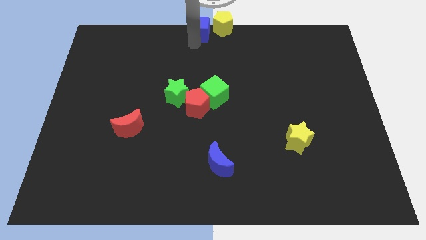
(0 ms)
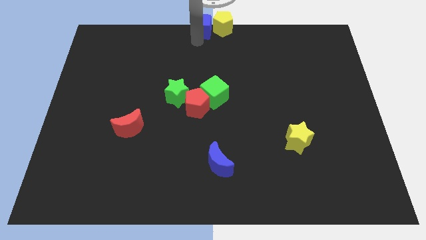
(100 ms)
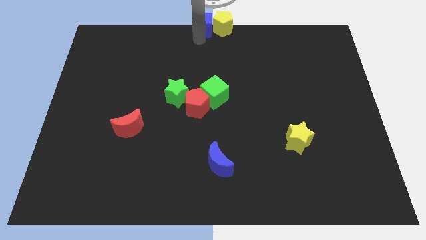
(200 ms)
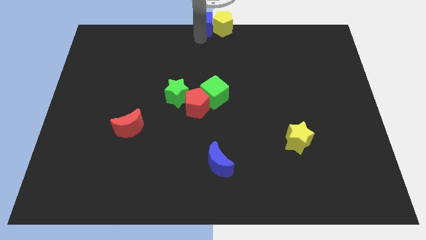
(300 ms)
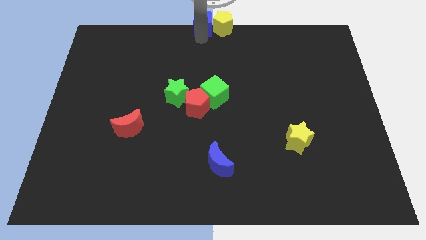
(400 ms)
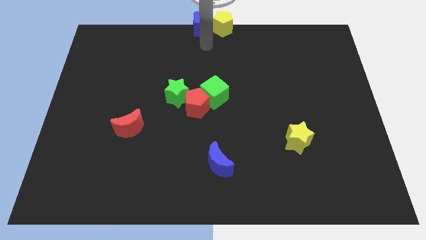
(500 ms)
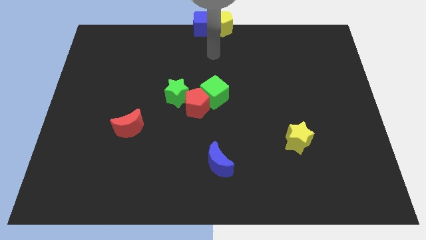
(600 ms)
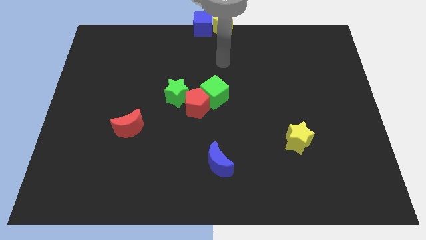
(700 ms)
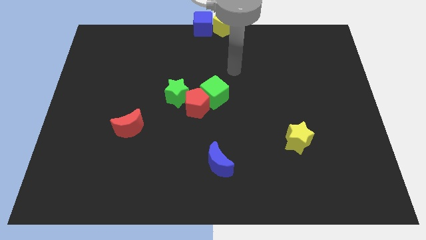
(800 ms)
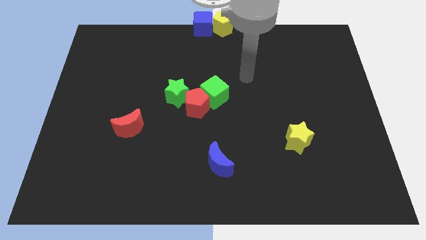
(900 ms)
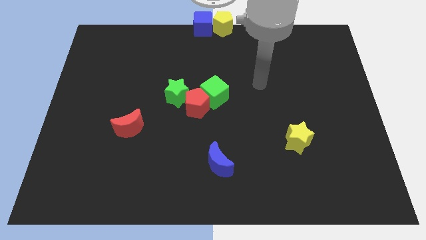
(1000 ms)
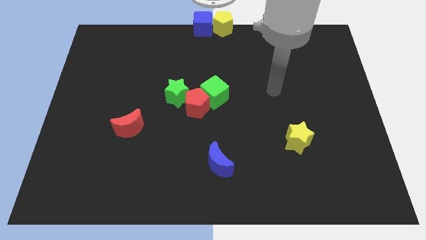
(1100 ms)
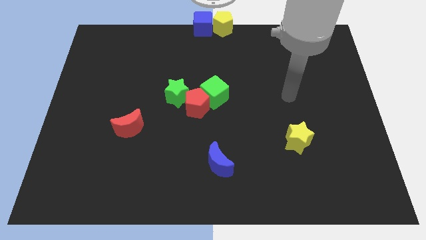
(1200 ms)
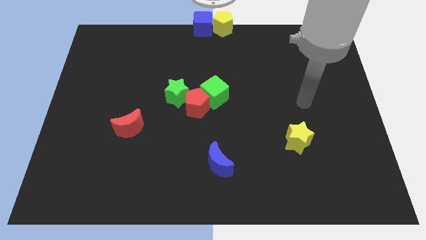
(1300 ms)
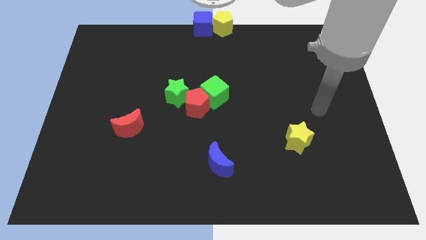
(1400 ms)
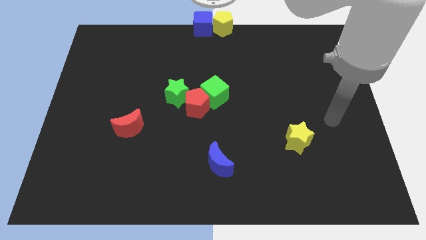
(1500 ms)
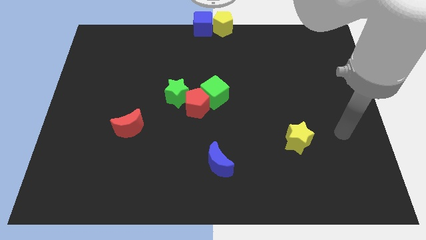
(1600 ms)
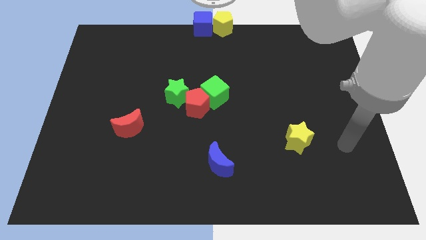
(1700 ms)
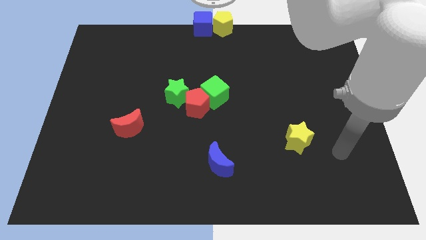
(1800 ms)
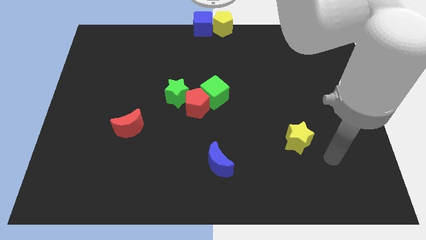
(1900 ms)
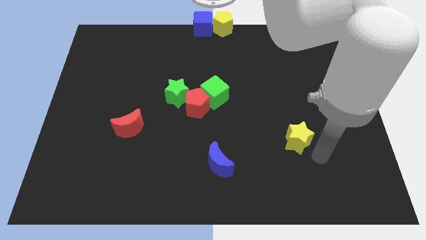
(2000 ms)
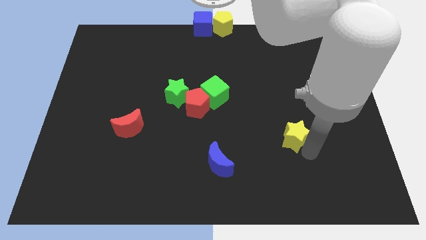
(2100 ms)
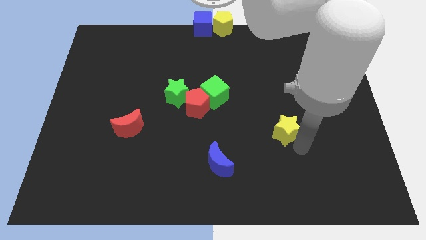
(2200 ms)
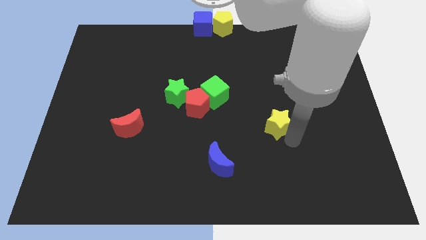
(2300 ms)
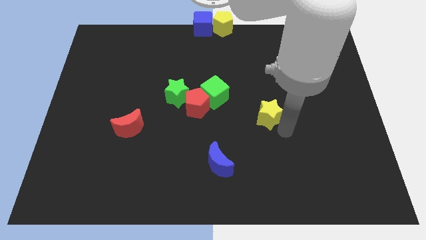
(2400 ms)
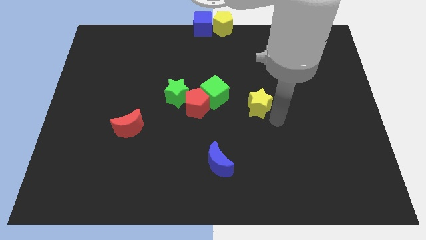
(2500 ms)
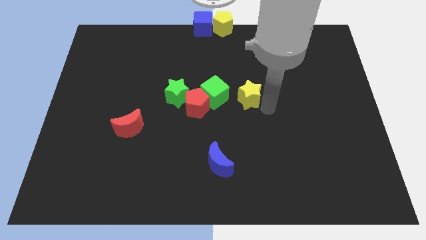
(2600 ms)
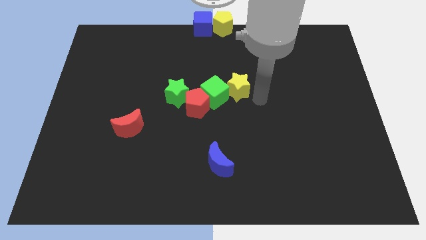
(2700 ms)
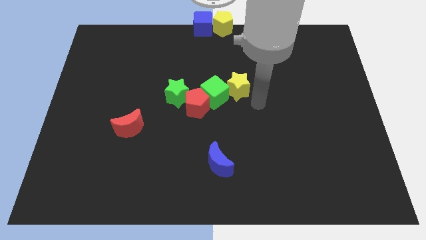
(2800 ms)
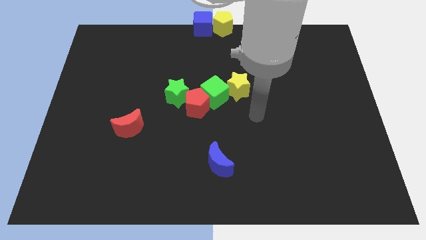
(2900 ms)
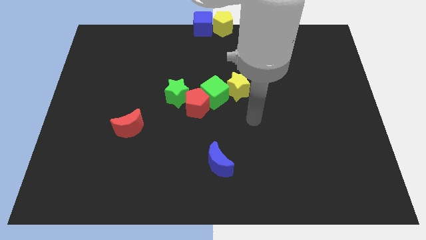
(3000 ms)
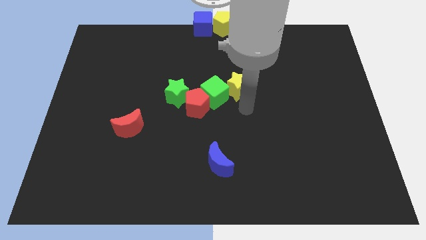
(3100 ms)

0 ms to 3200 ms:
slide the yellow star towards the top center

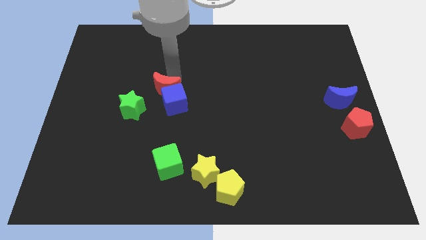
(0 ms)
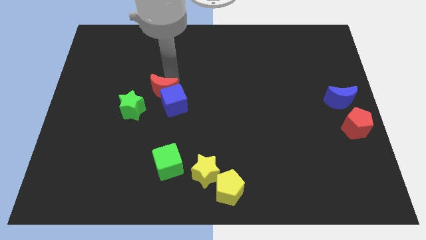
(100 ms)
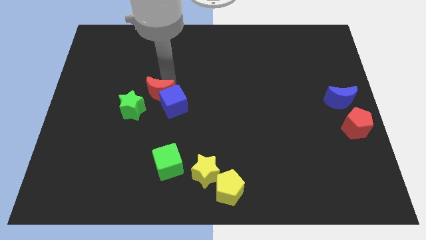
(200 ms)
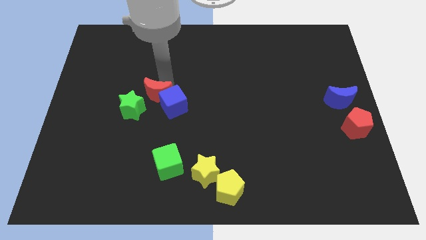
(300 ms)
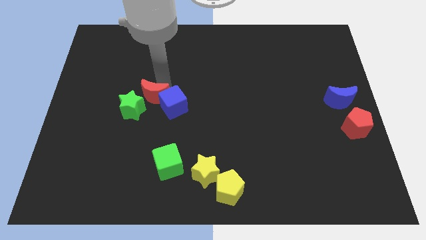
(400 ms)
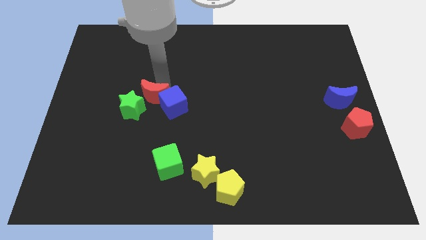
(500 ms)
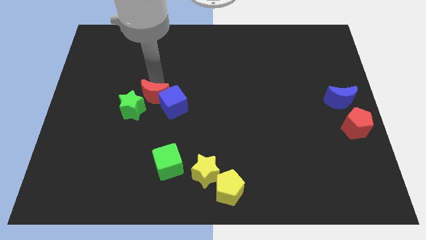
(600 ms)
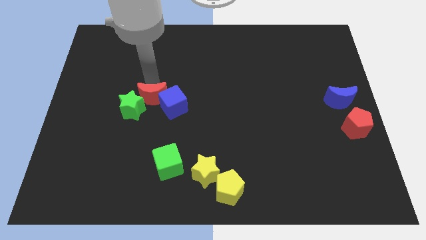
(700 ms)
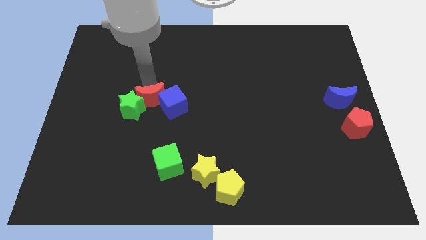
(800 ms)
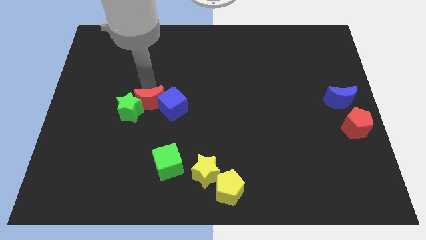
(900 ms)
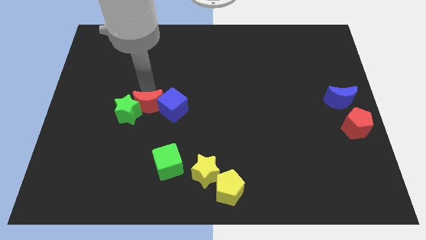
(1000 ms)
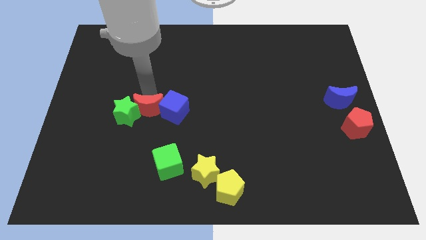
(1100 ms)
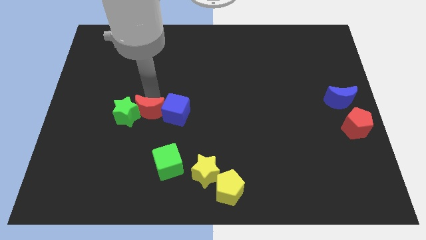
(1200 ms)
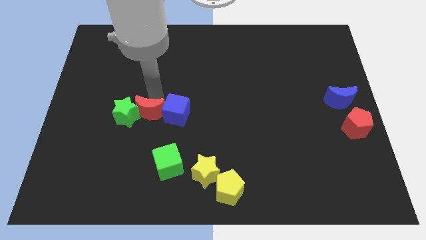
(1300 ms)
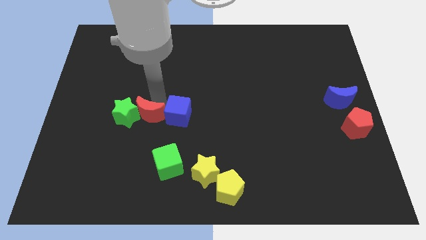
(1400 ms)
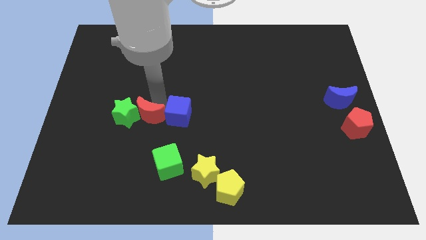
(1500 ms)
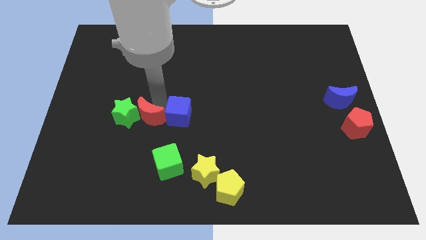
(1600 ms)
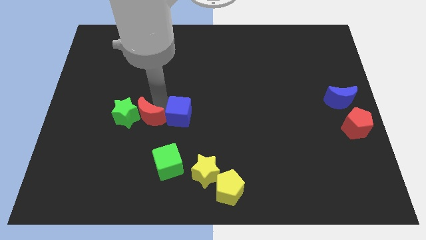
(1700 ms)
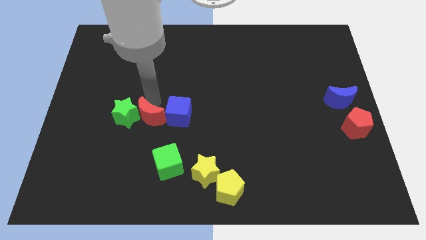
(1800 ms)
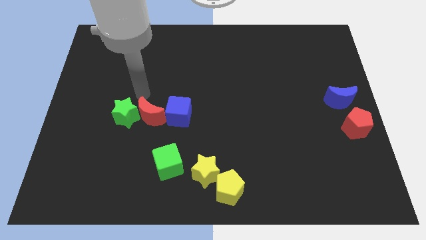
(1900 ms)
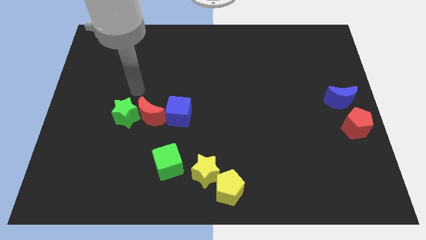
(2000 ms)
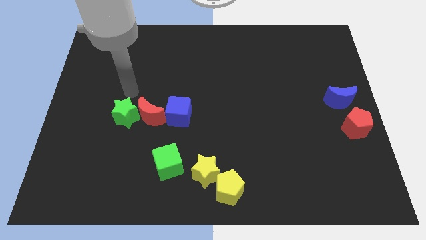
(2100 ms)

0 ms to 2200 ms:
push the red crescent between green star and blue cube

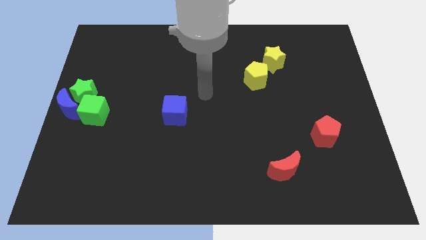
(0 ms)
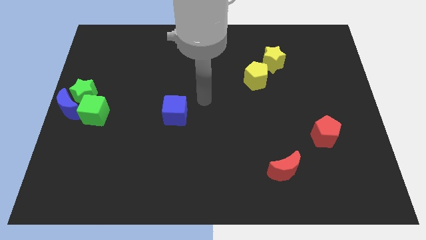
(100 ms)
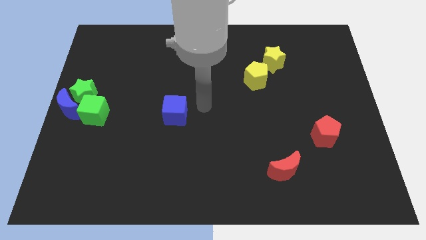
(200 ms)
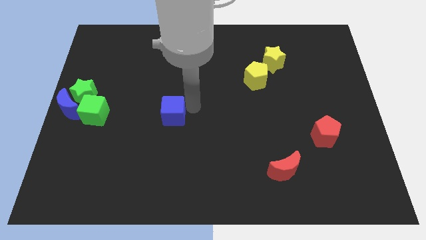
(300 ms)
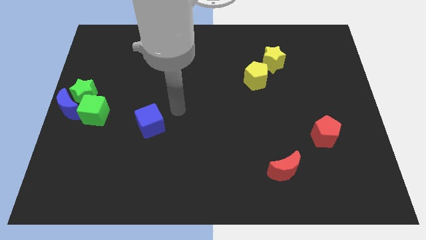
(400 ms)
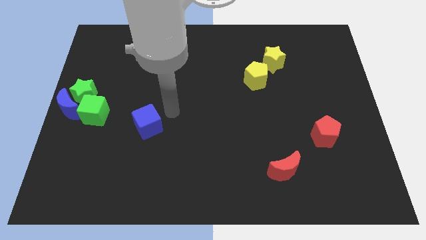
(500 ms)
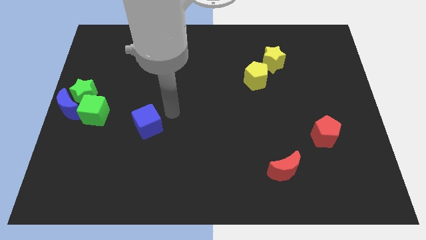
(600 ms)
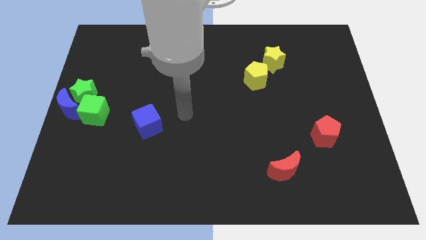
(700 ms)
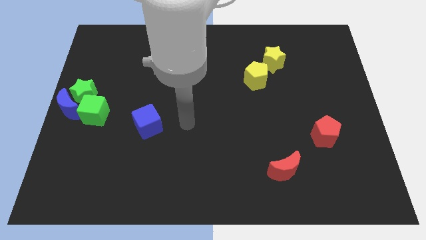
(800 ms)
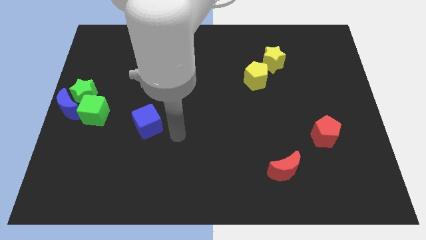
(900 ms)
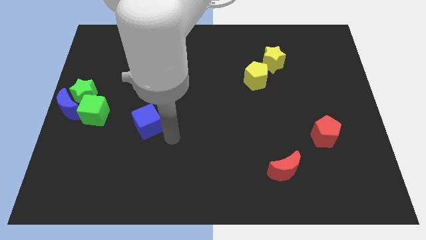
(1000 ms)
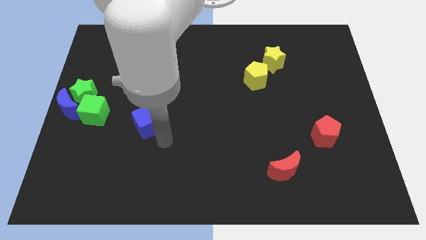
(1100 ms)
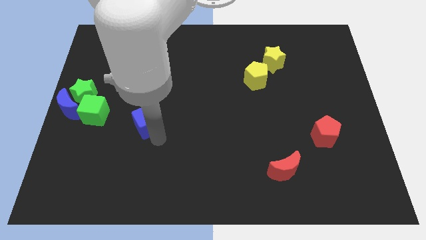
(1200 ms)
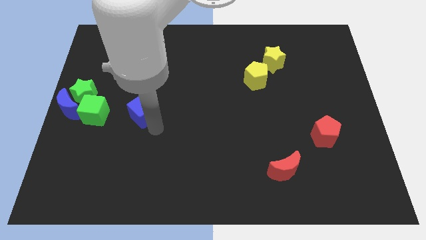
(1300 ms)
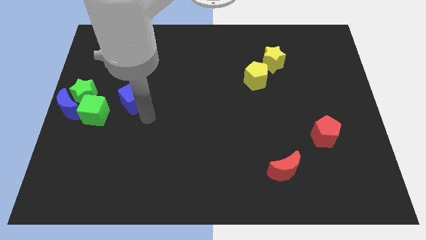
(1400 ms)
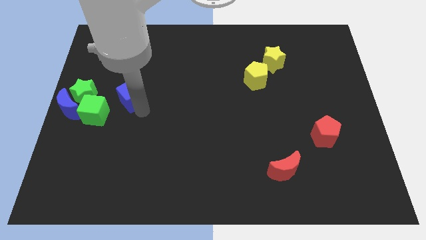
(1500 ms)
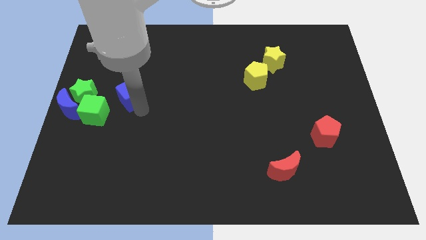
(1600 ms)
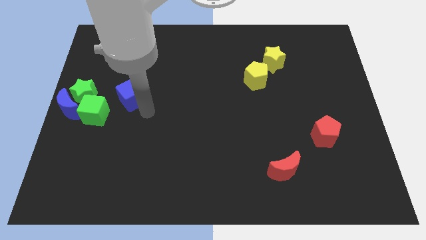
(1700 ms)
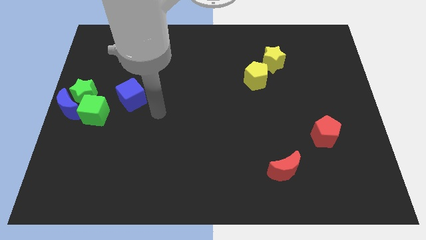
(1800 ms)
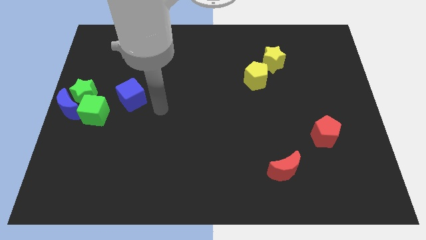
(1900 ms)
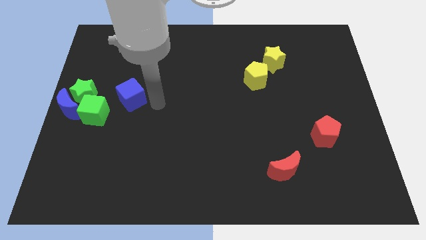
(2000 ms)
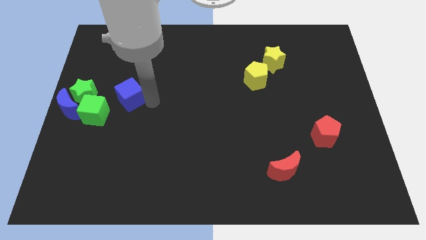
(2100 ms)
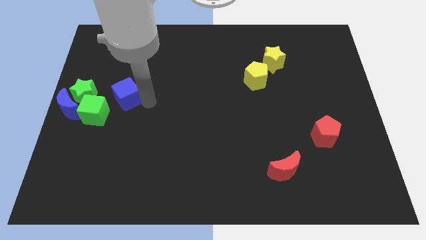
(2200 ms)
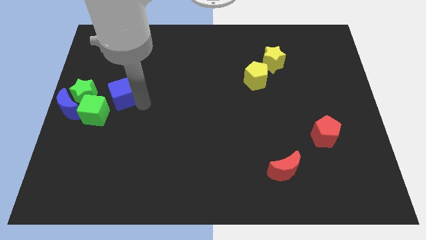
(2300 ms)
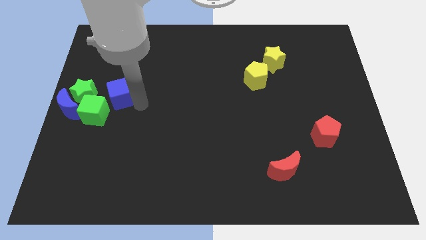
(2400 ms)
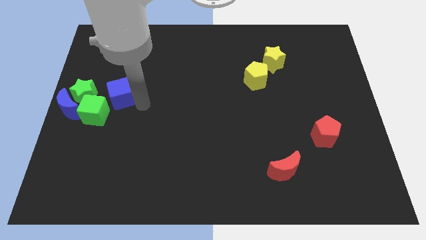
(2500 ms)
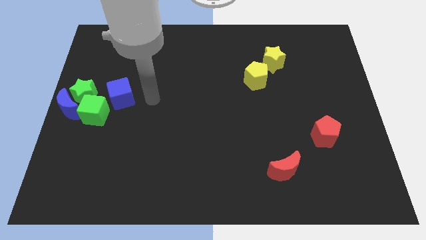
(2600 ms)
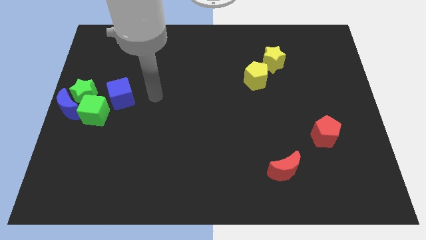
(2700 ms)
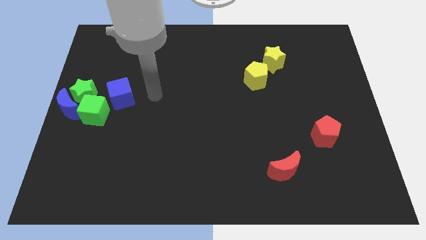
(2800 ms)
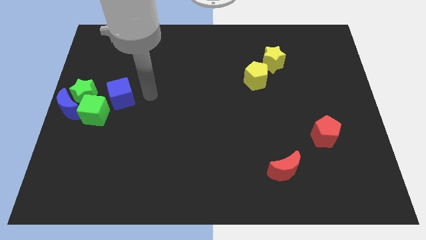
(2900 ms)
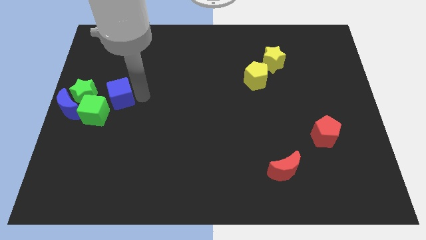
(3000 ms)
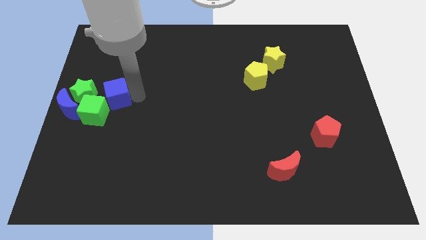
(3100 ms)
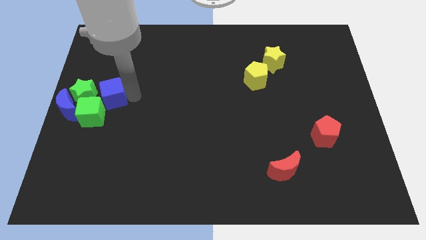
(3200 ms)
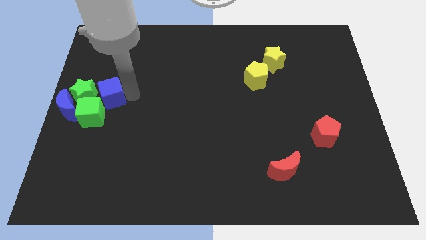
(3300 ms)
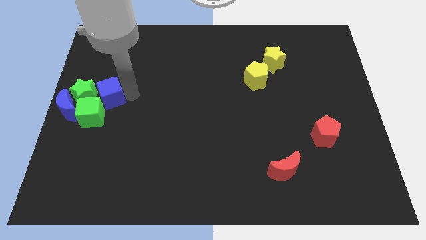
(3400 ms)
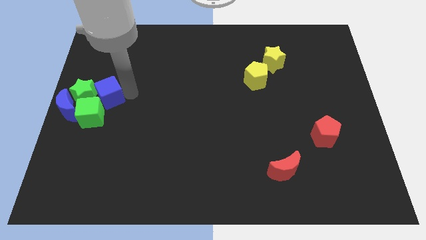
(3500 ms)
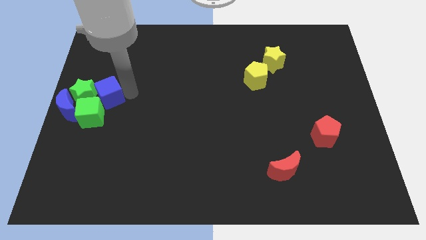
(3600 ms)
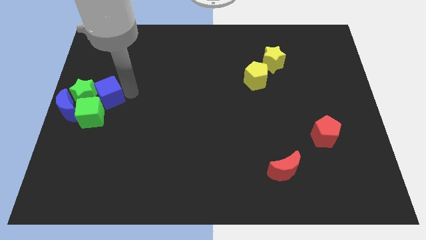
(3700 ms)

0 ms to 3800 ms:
push the blue cube into the green star from the right
